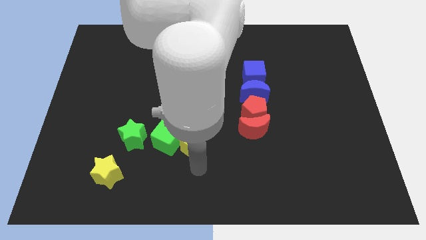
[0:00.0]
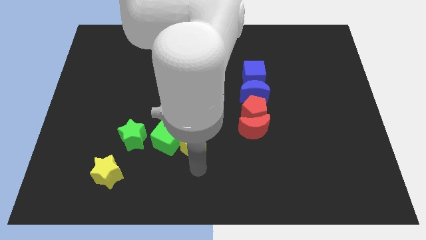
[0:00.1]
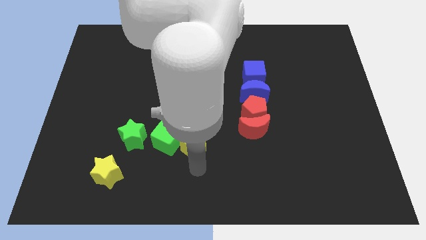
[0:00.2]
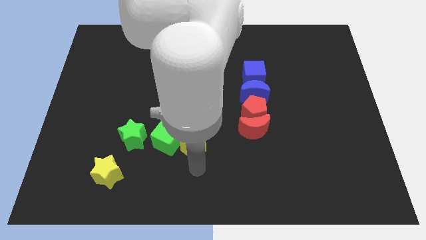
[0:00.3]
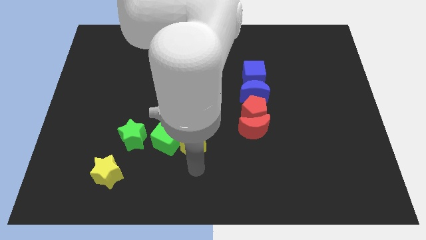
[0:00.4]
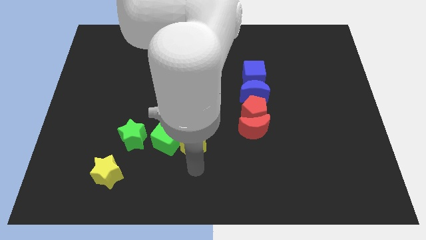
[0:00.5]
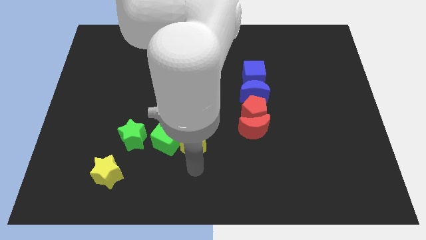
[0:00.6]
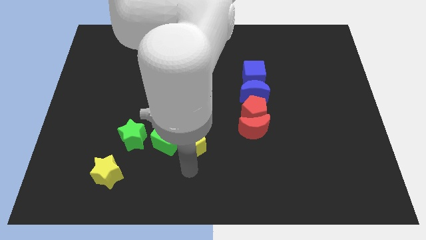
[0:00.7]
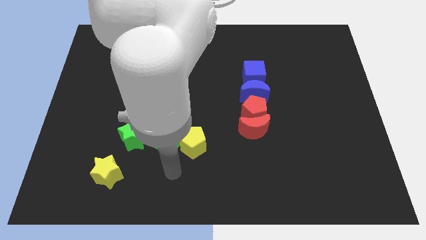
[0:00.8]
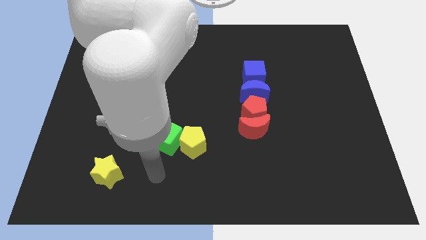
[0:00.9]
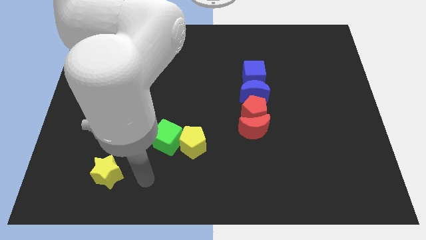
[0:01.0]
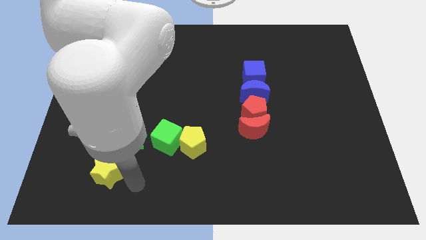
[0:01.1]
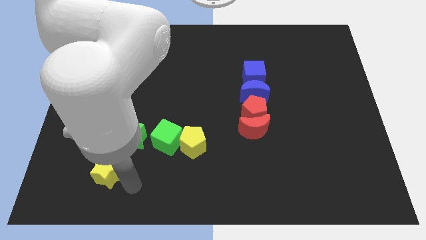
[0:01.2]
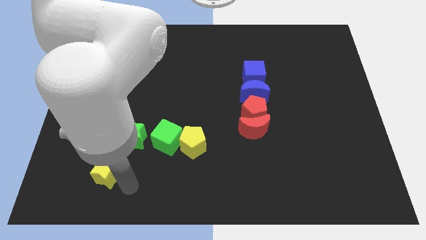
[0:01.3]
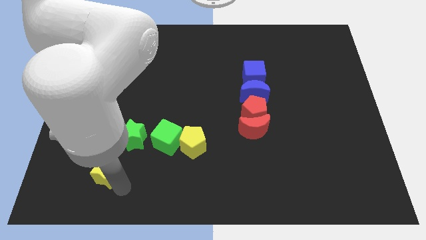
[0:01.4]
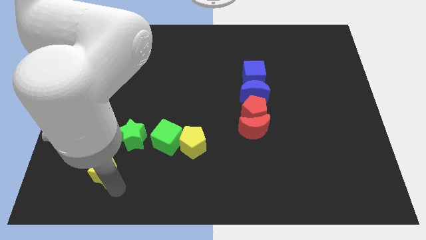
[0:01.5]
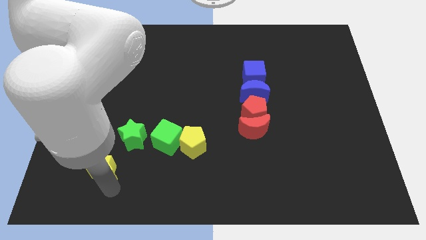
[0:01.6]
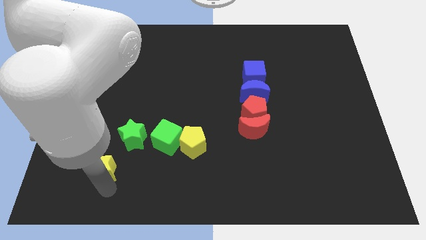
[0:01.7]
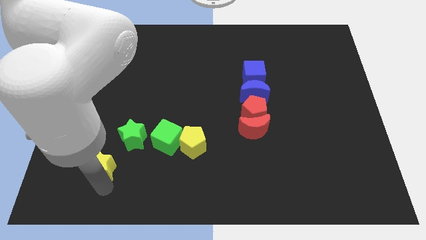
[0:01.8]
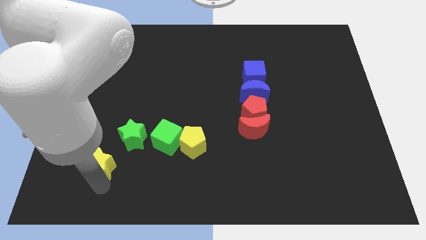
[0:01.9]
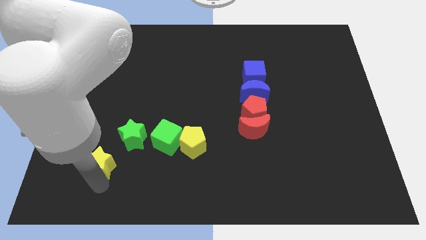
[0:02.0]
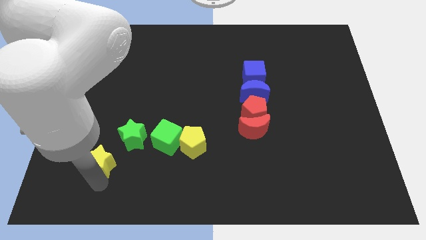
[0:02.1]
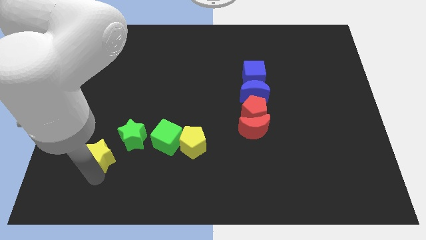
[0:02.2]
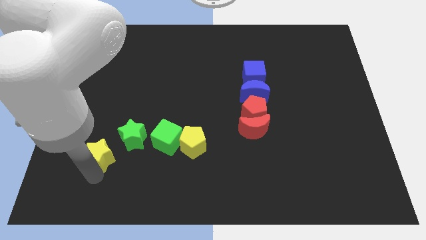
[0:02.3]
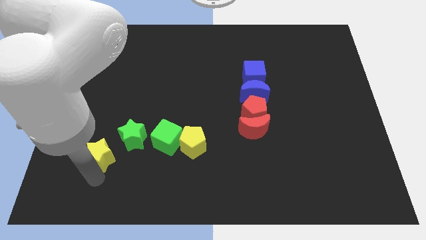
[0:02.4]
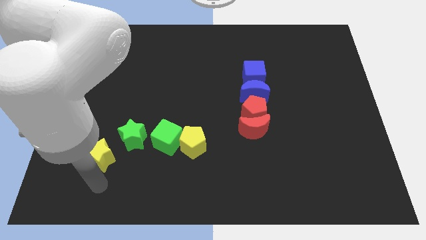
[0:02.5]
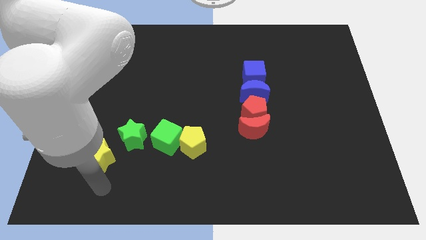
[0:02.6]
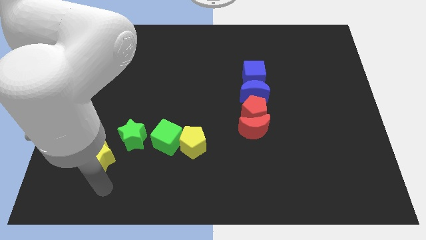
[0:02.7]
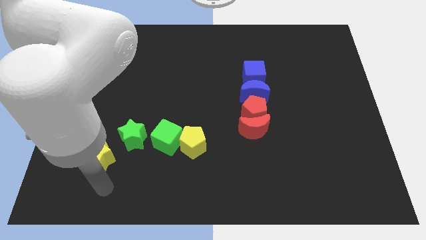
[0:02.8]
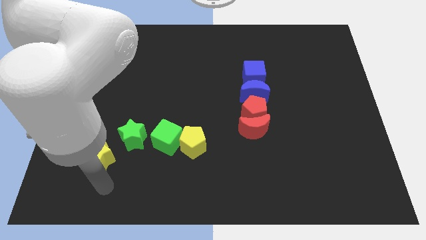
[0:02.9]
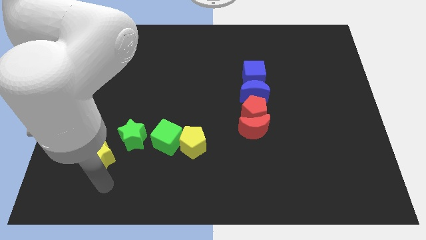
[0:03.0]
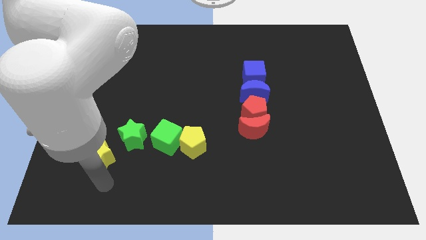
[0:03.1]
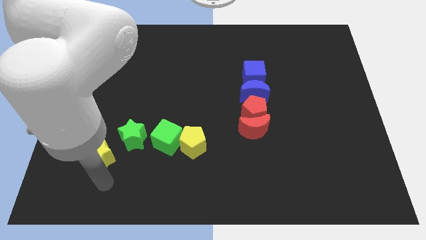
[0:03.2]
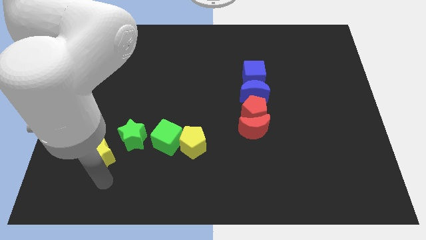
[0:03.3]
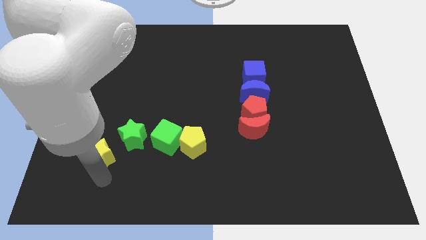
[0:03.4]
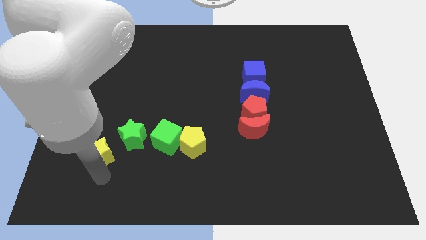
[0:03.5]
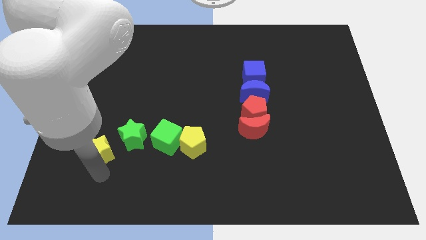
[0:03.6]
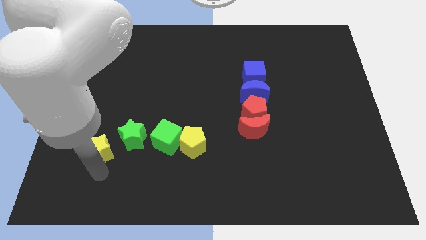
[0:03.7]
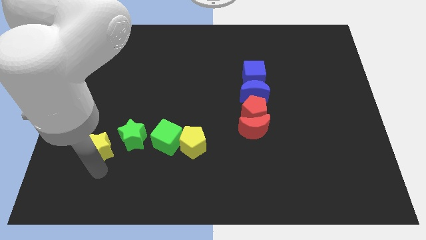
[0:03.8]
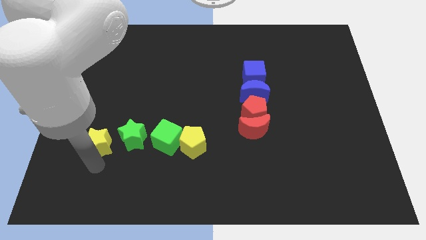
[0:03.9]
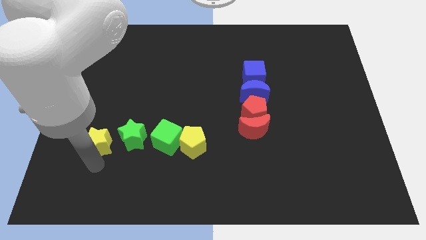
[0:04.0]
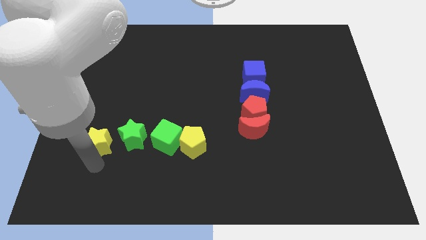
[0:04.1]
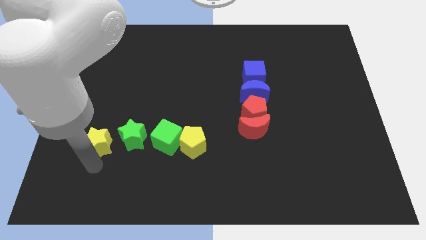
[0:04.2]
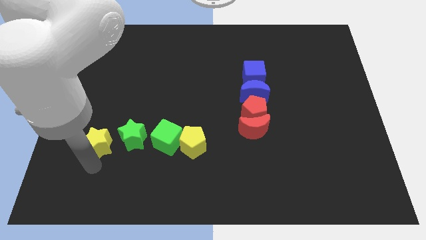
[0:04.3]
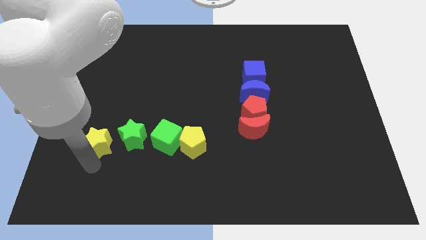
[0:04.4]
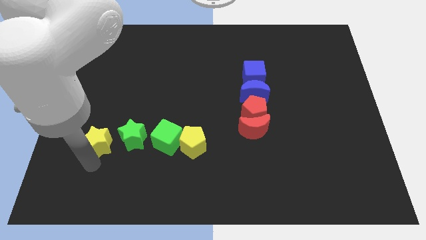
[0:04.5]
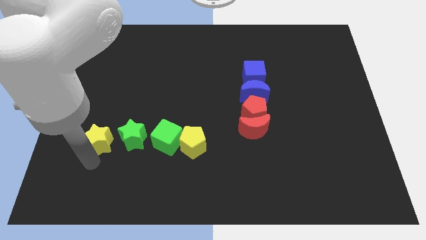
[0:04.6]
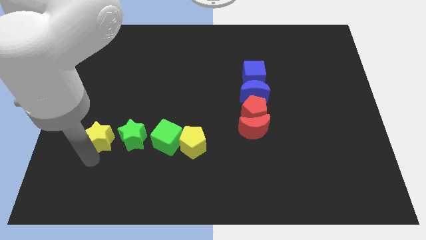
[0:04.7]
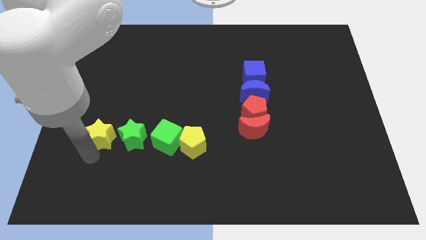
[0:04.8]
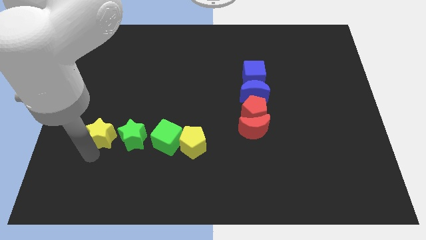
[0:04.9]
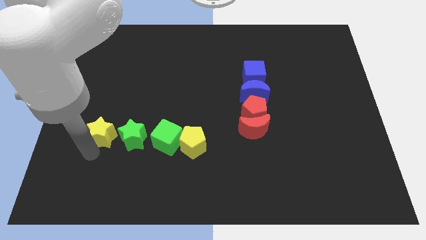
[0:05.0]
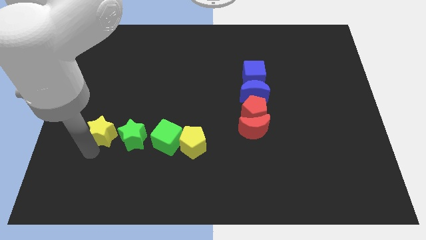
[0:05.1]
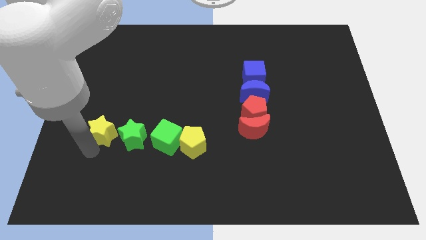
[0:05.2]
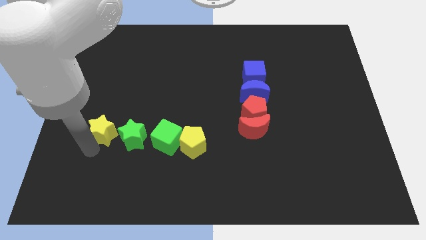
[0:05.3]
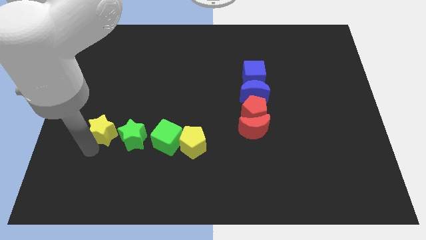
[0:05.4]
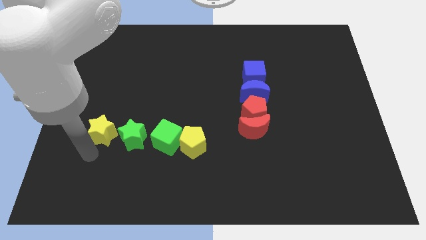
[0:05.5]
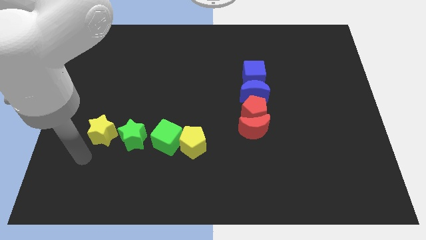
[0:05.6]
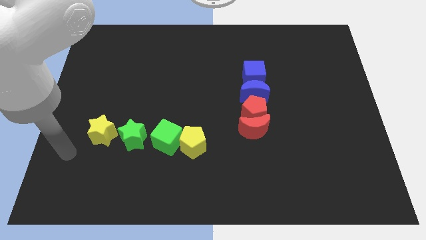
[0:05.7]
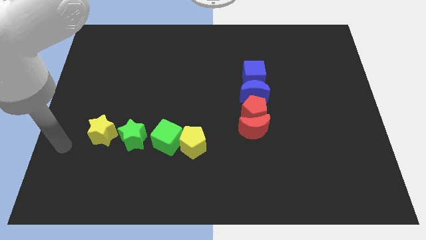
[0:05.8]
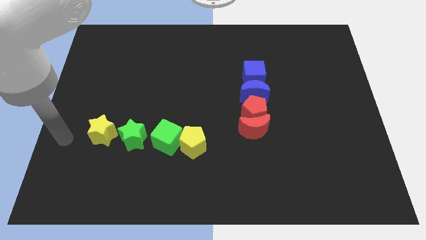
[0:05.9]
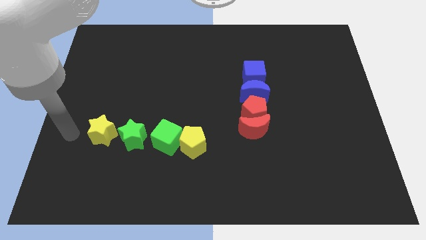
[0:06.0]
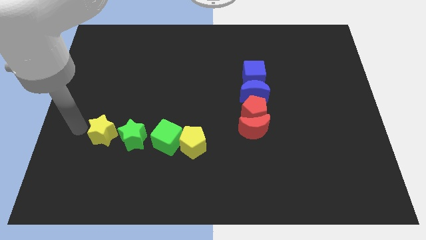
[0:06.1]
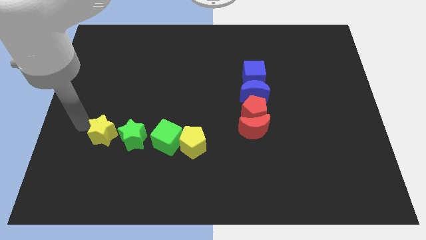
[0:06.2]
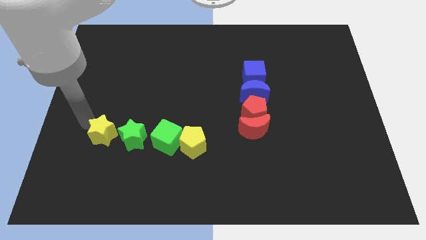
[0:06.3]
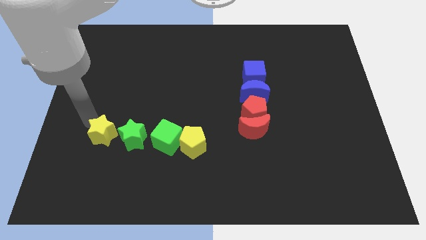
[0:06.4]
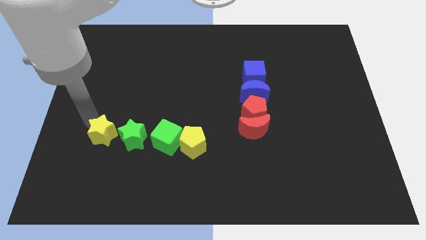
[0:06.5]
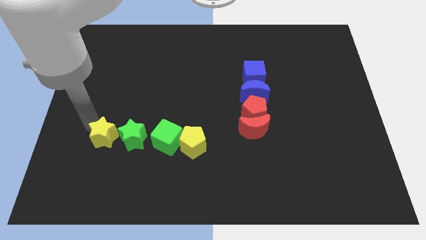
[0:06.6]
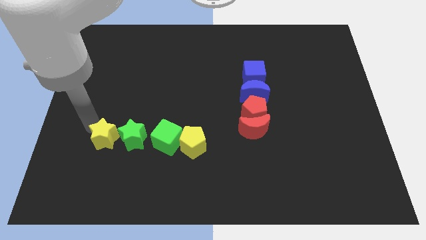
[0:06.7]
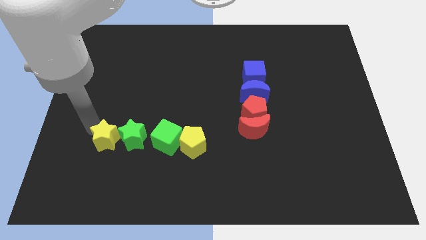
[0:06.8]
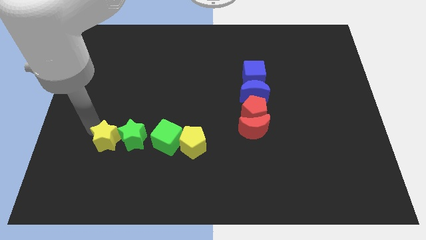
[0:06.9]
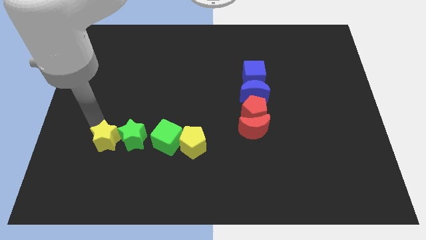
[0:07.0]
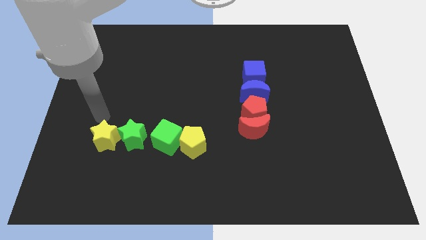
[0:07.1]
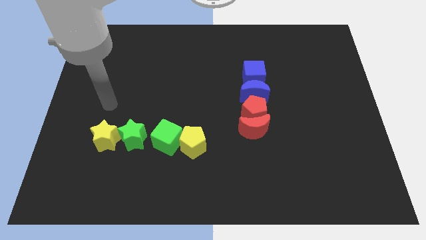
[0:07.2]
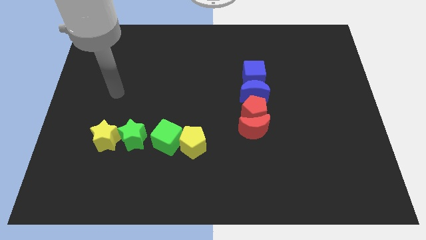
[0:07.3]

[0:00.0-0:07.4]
push the yellow star to the left of the green star

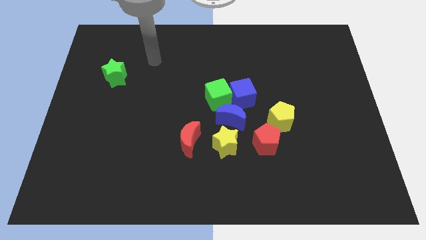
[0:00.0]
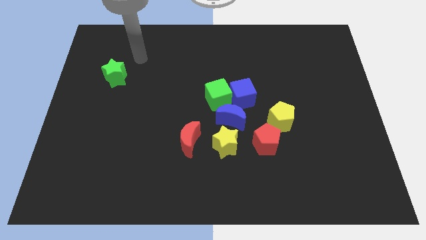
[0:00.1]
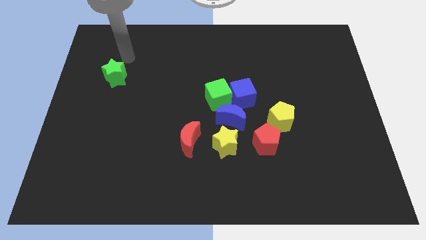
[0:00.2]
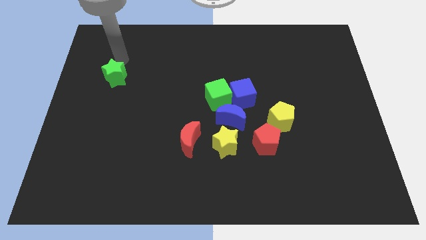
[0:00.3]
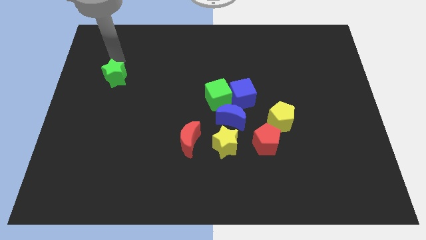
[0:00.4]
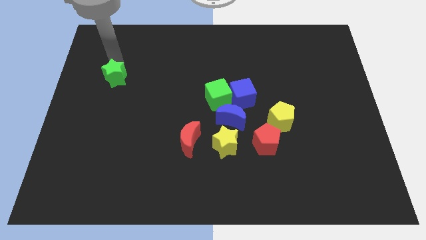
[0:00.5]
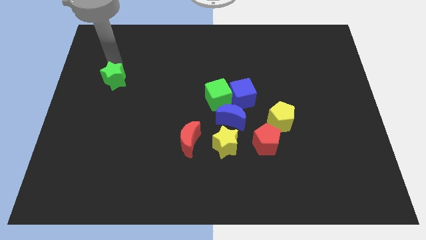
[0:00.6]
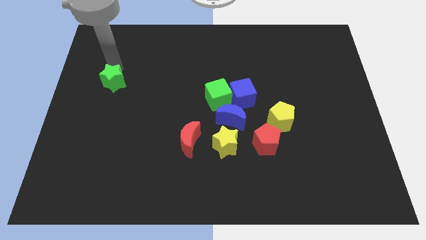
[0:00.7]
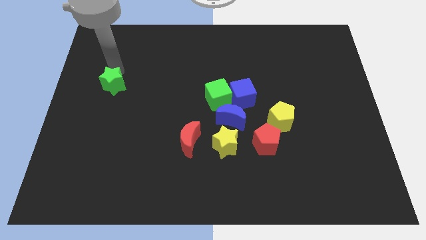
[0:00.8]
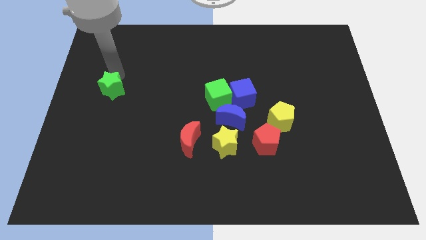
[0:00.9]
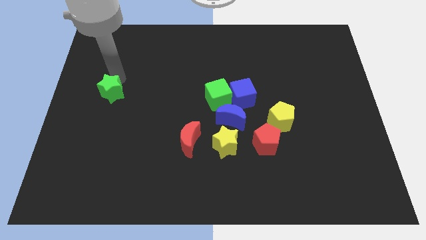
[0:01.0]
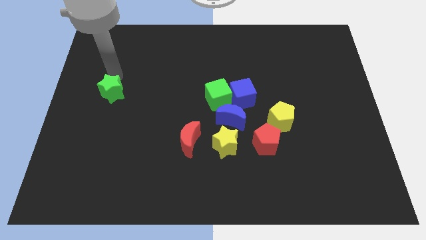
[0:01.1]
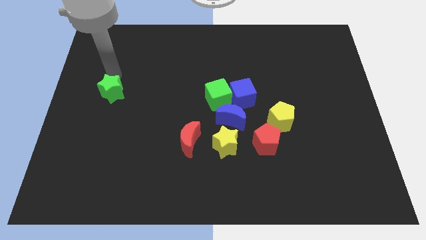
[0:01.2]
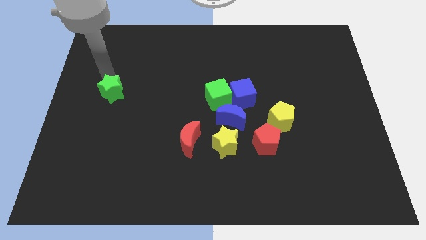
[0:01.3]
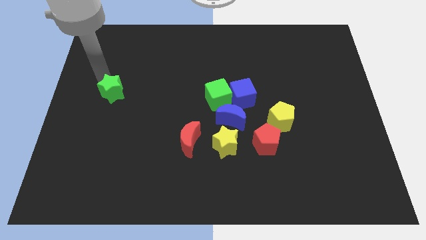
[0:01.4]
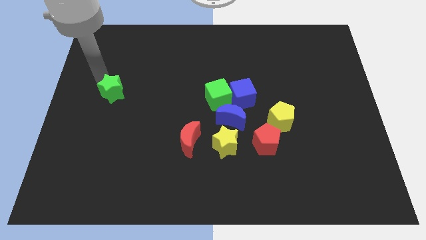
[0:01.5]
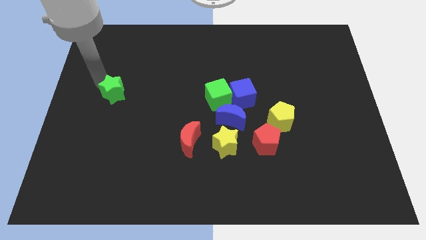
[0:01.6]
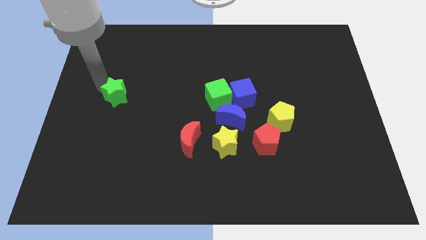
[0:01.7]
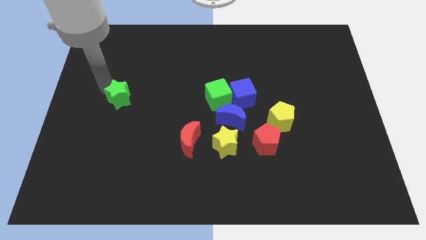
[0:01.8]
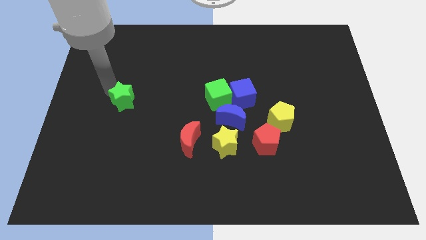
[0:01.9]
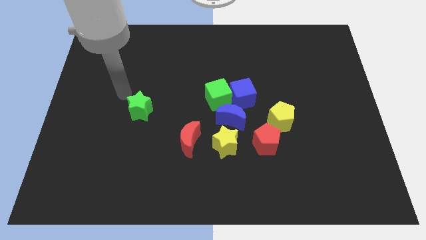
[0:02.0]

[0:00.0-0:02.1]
move green star to the left of blue moon
